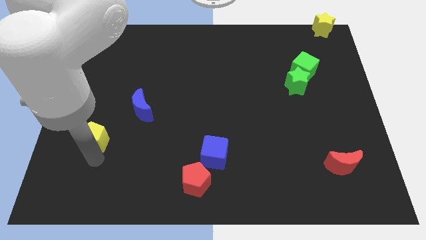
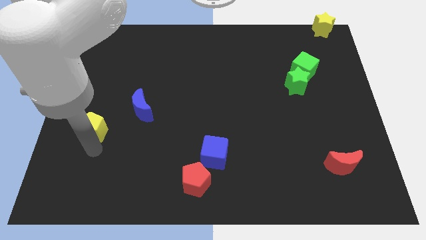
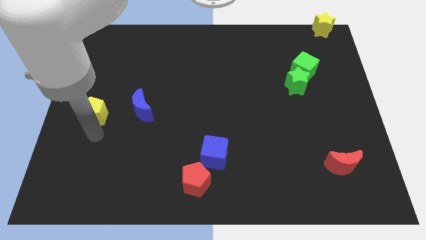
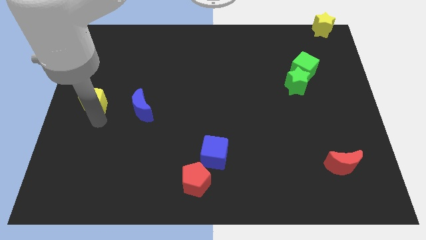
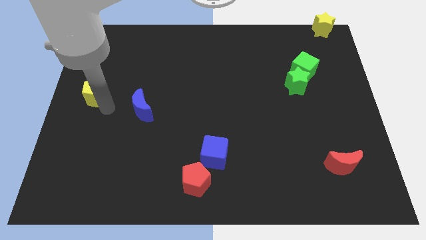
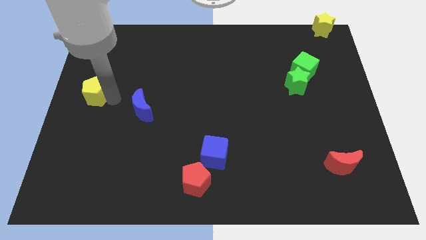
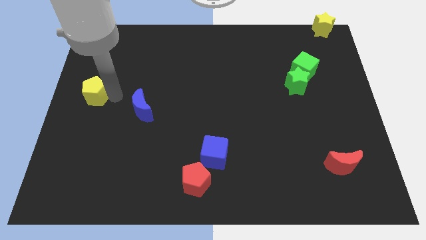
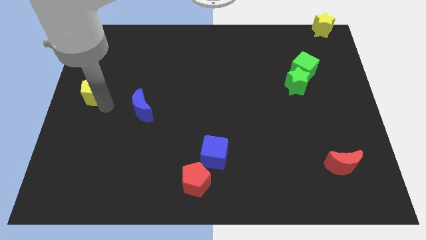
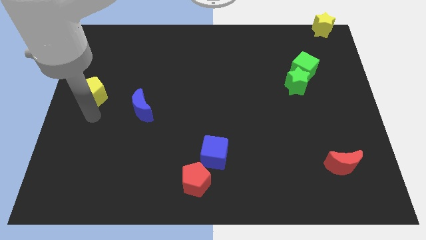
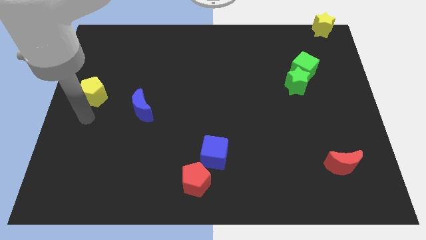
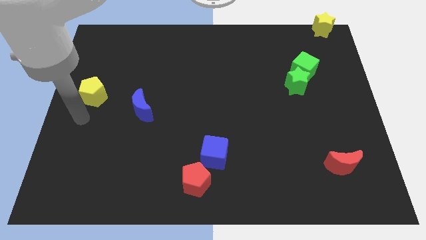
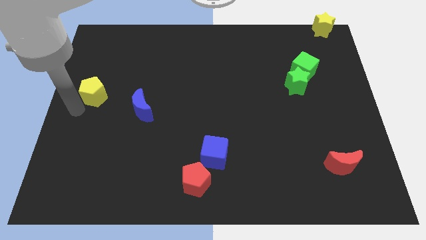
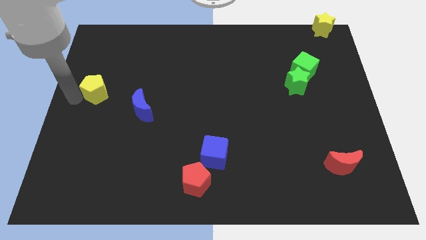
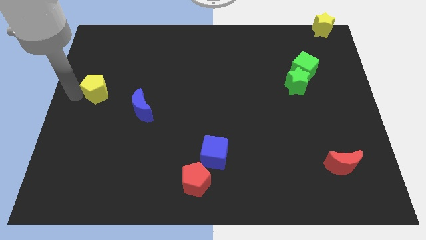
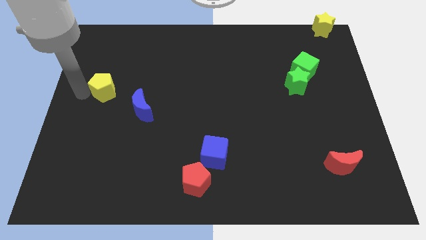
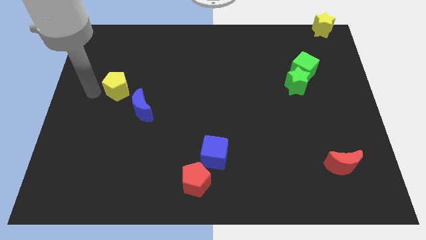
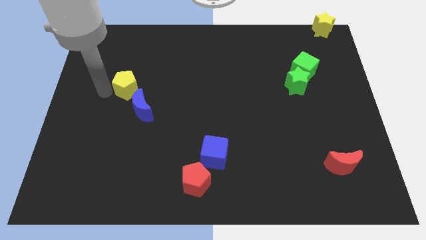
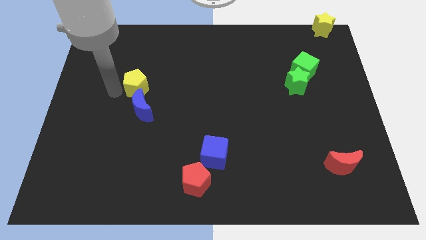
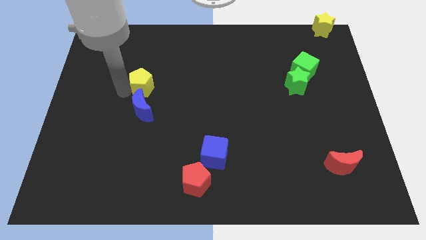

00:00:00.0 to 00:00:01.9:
move the yellow pentagon above the blue moon

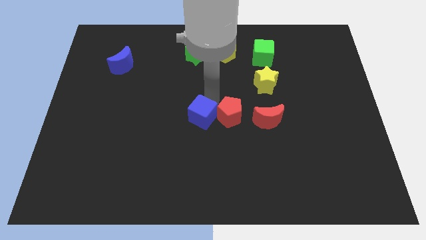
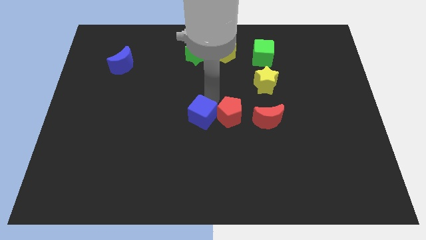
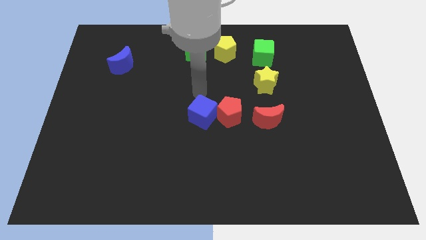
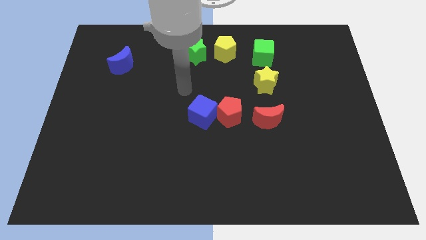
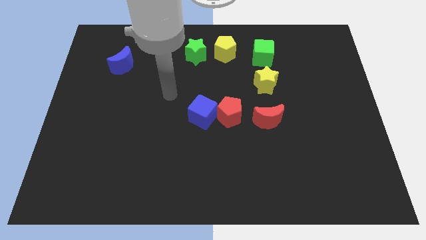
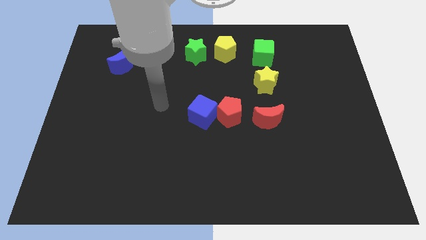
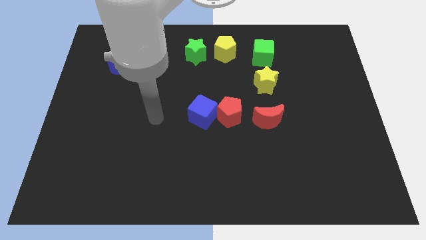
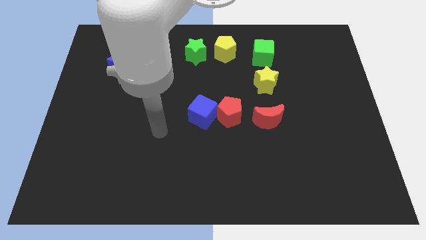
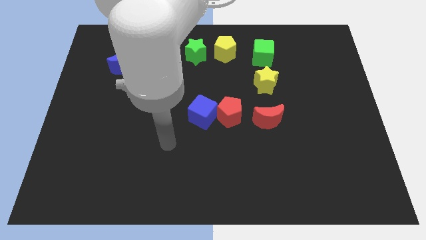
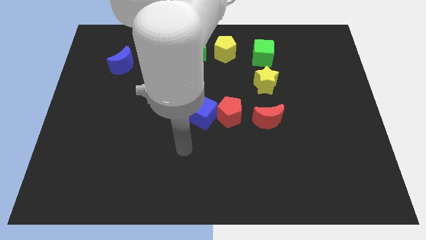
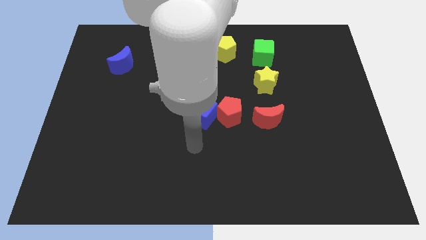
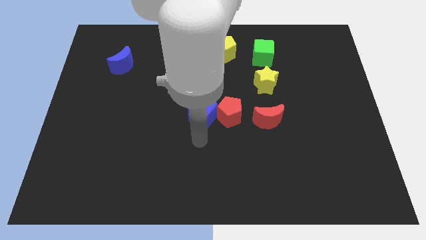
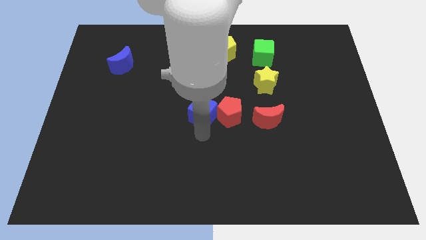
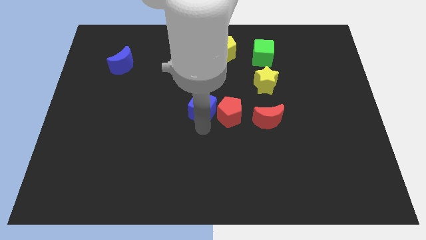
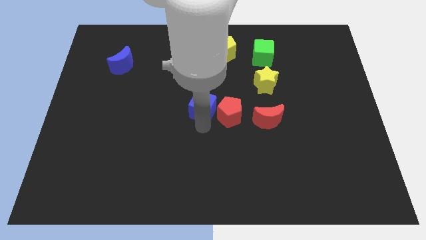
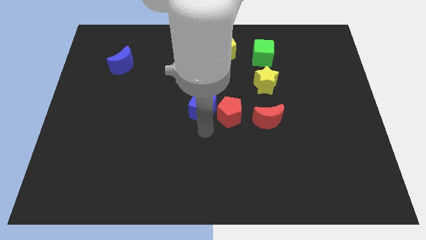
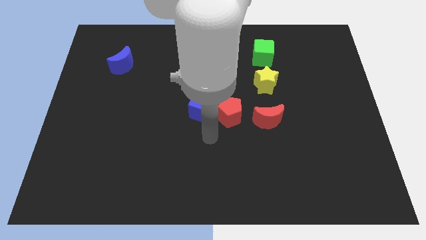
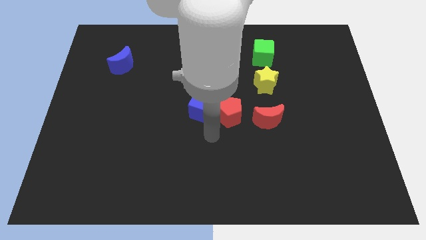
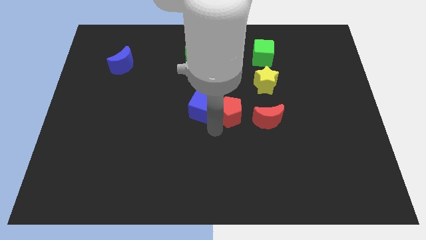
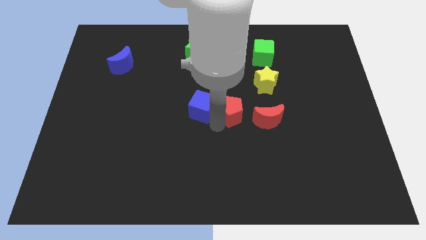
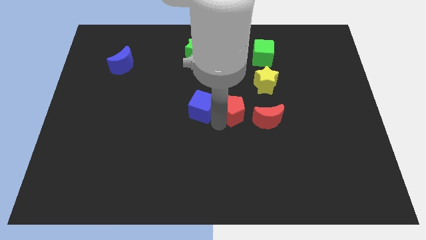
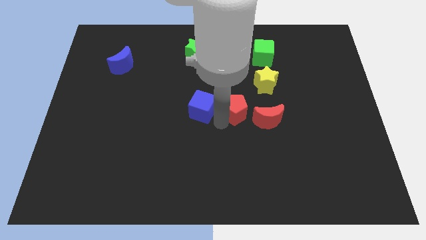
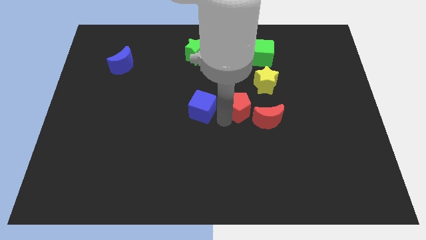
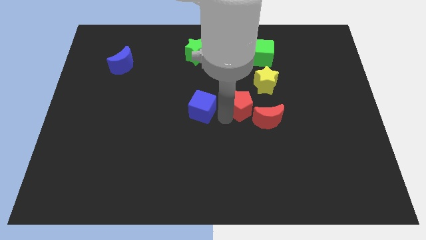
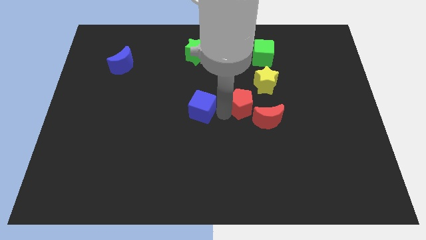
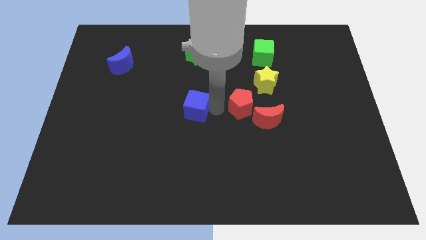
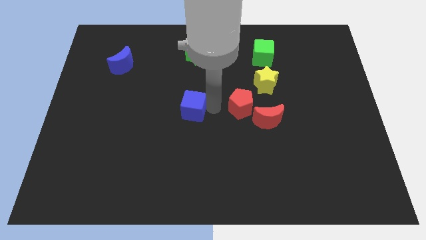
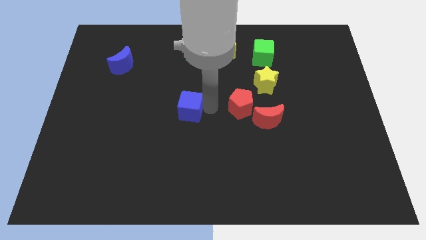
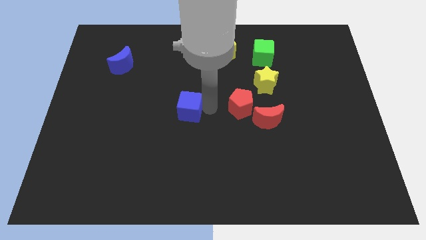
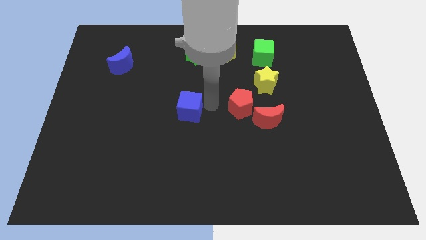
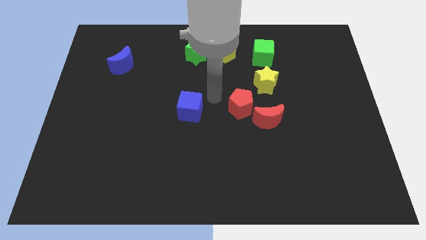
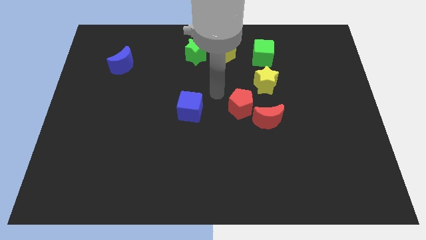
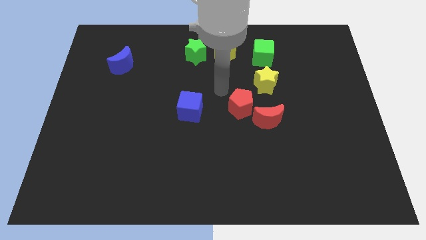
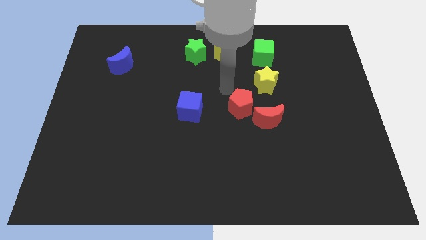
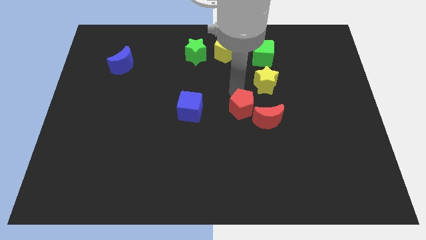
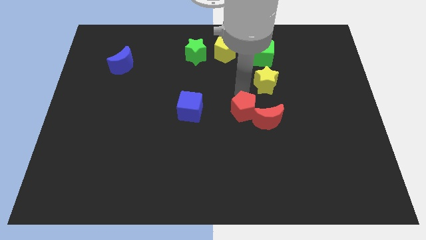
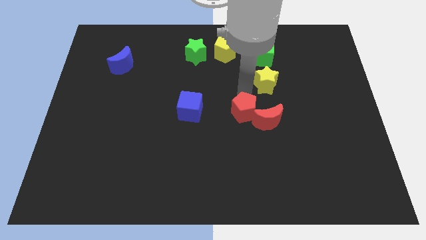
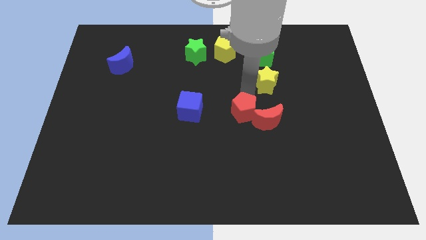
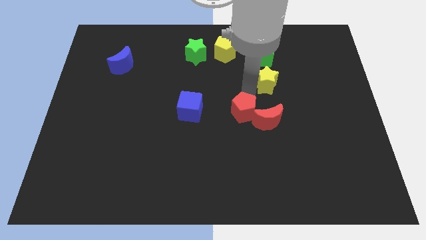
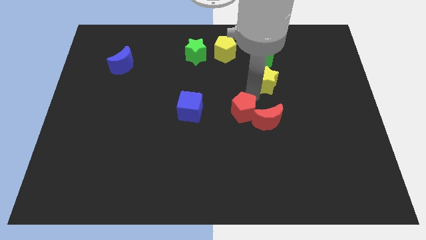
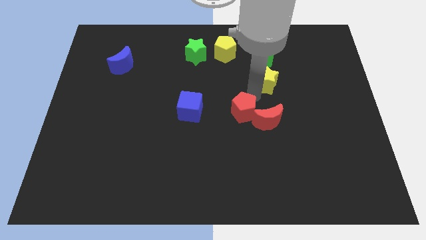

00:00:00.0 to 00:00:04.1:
separate the blue cube and the red pentagon

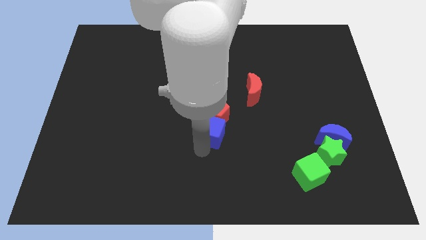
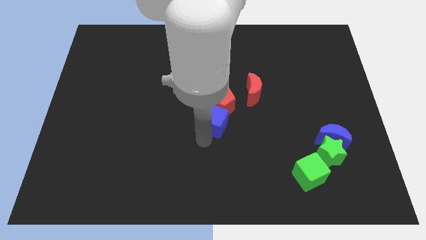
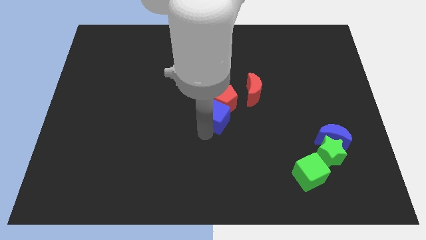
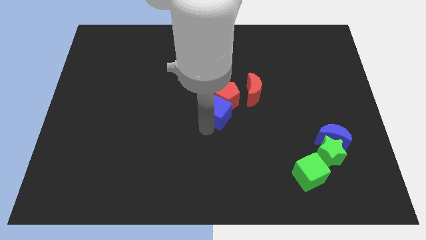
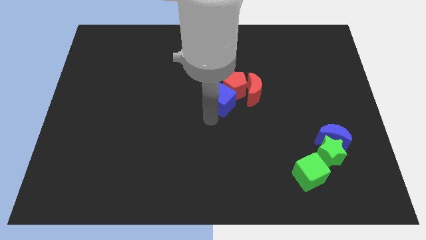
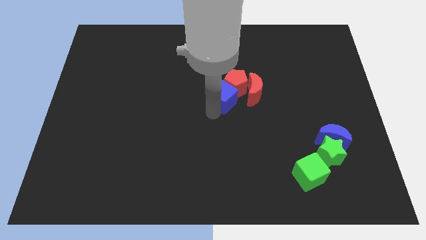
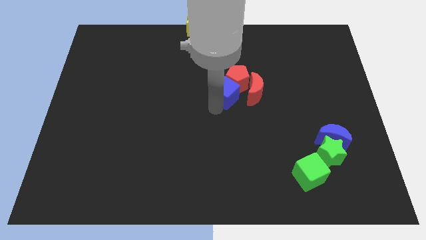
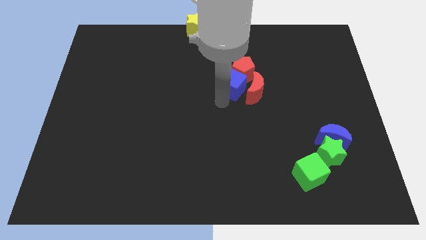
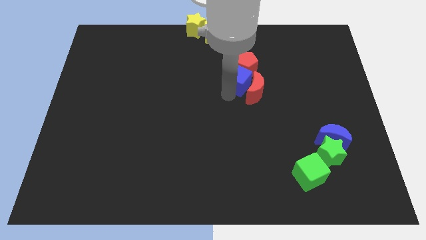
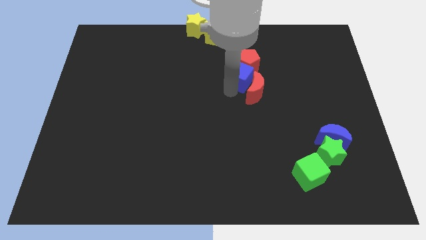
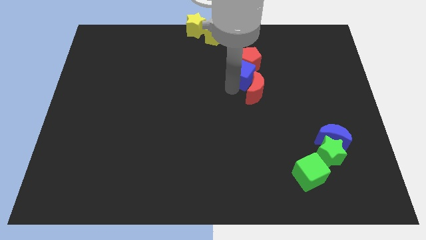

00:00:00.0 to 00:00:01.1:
move blue cube along with red pentagon into red moon

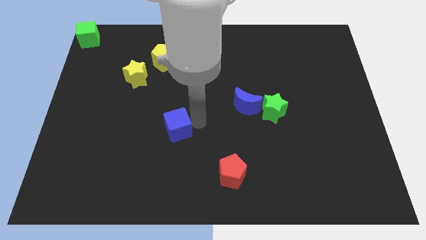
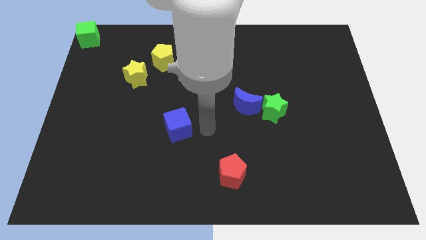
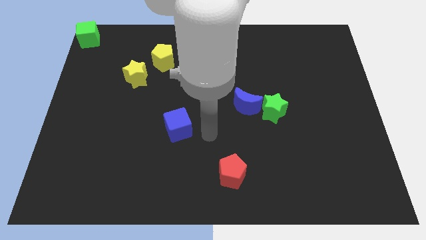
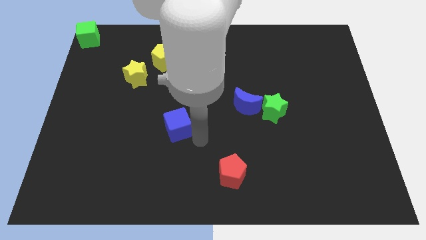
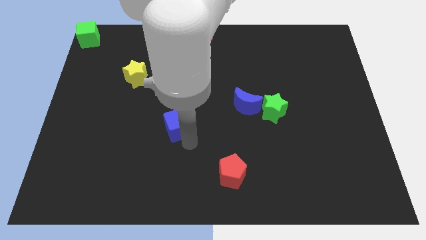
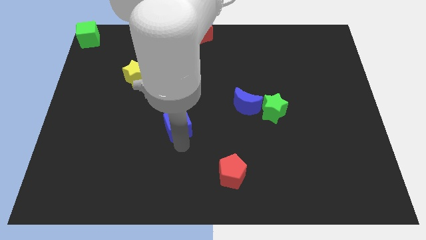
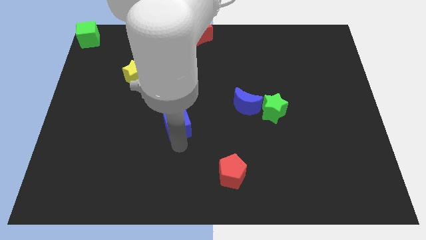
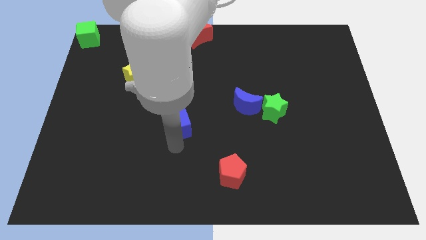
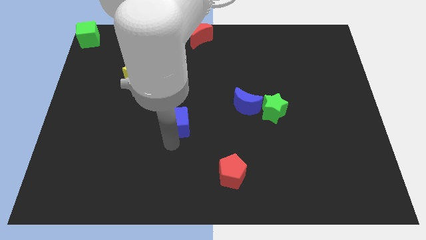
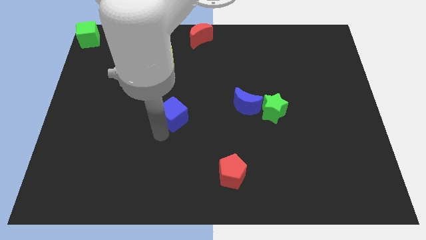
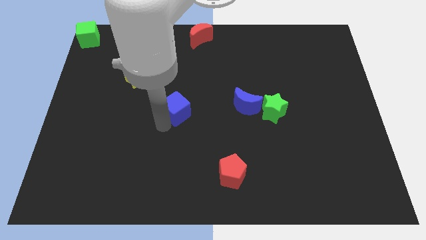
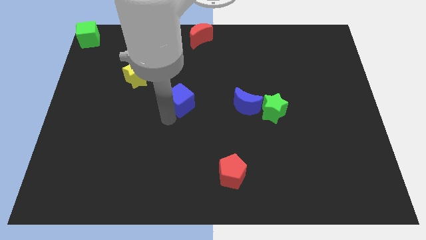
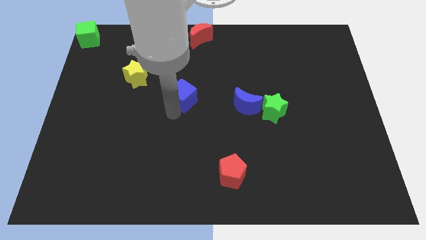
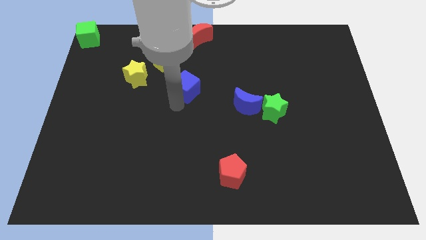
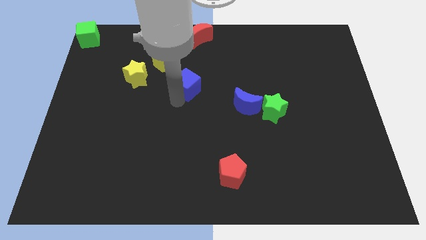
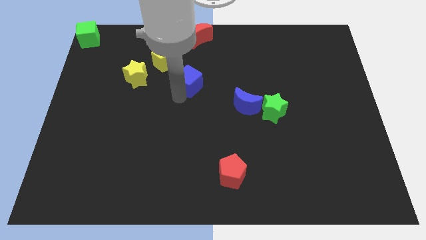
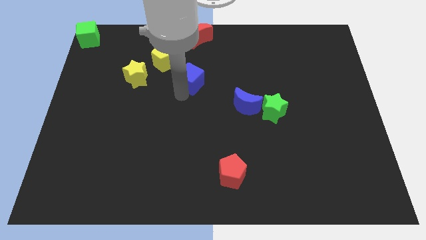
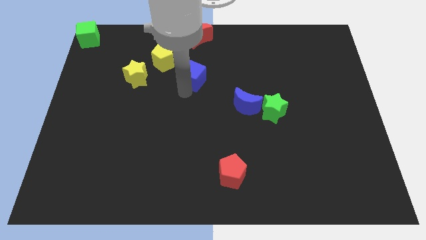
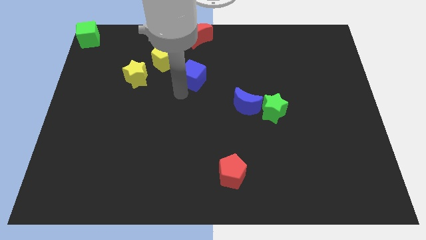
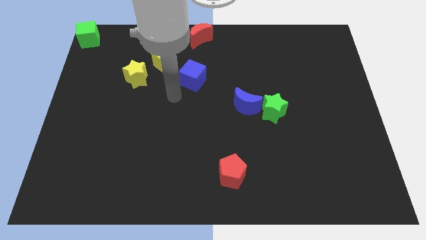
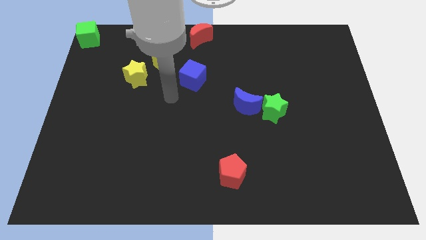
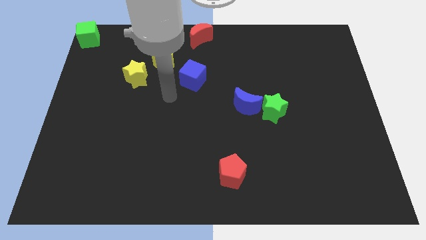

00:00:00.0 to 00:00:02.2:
put the blue cube horizontally right to the yellow star
